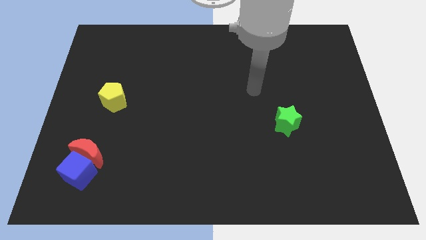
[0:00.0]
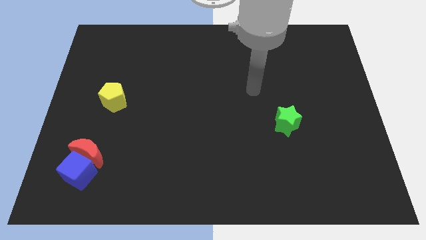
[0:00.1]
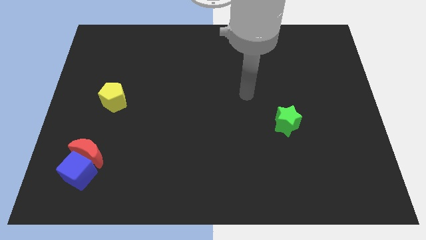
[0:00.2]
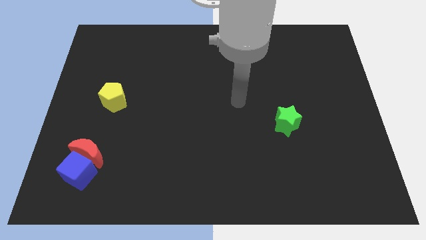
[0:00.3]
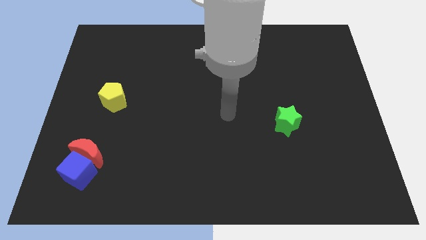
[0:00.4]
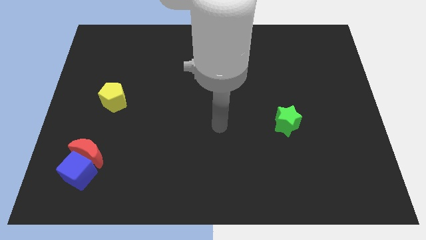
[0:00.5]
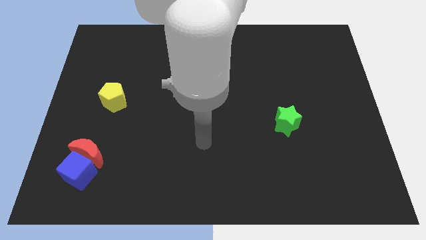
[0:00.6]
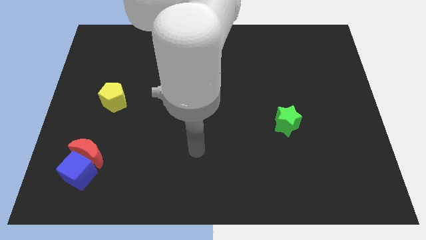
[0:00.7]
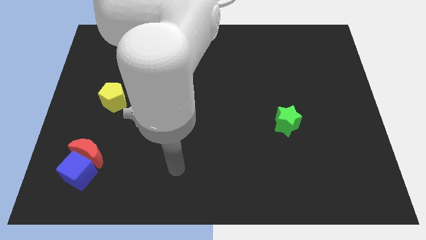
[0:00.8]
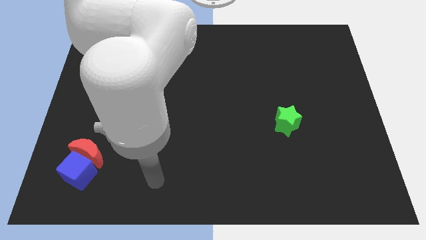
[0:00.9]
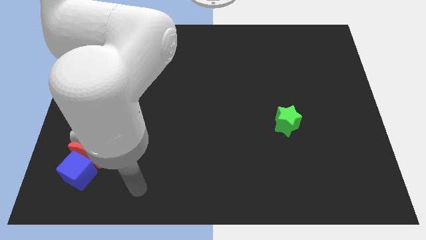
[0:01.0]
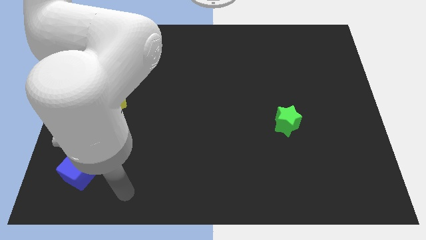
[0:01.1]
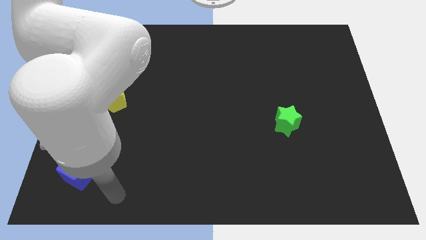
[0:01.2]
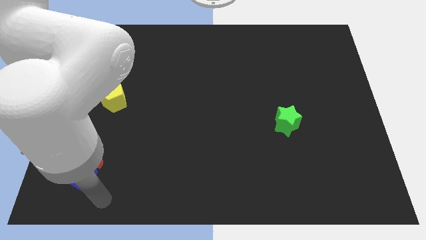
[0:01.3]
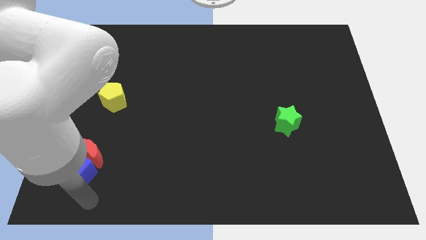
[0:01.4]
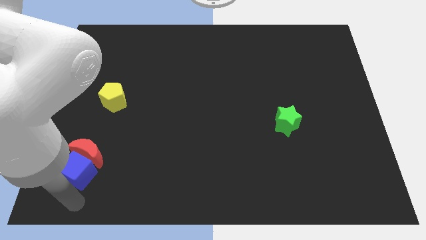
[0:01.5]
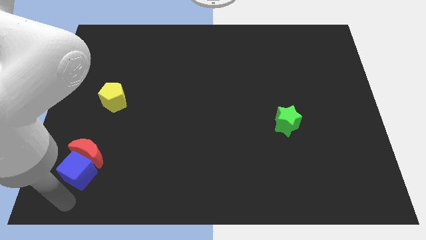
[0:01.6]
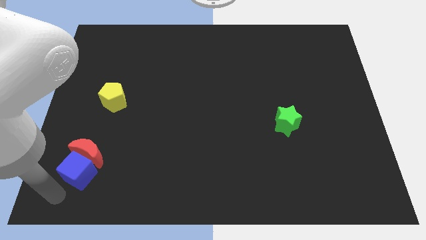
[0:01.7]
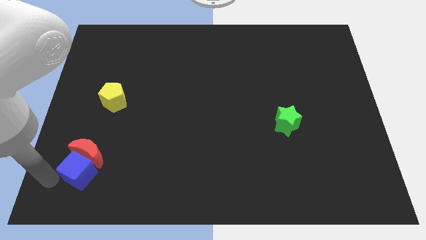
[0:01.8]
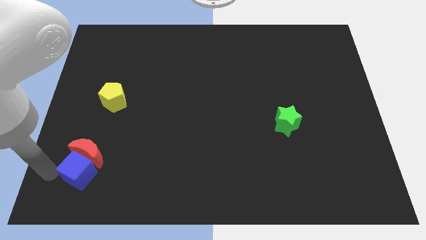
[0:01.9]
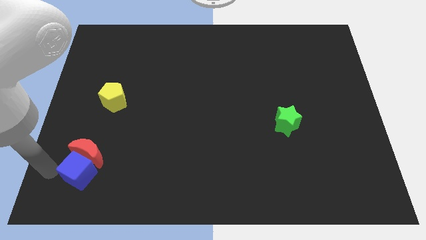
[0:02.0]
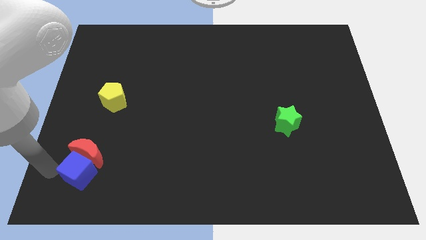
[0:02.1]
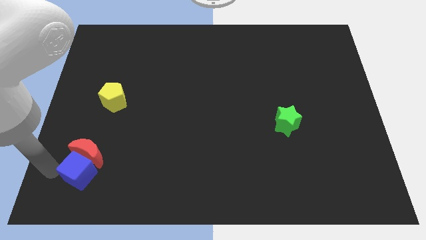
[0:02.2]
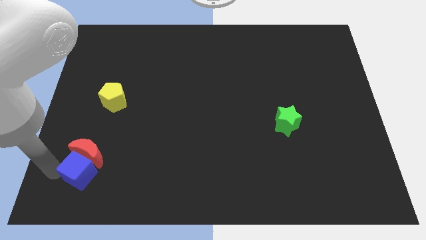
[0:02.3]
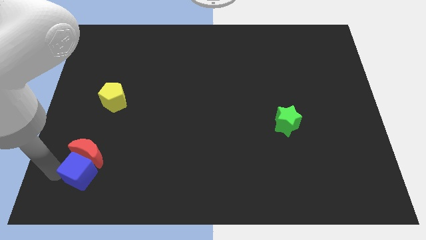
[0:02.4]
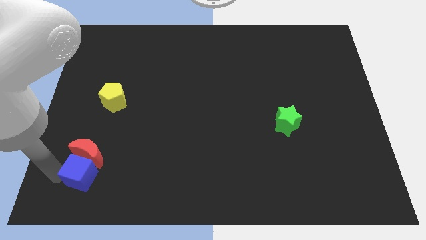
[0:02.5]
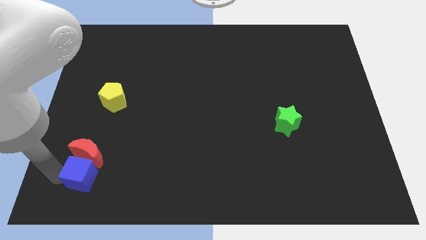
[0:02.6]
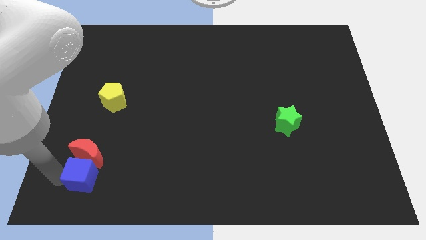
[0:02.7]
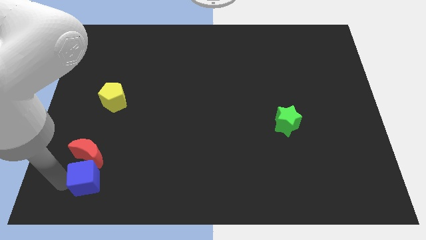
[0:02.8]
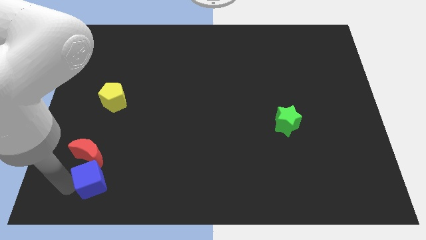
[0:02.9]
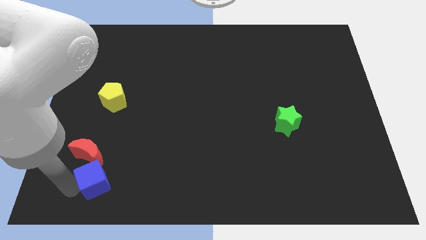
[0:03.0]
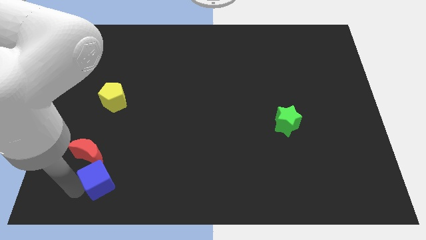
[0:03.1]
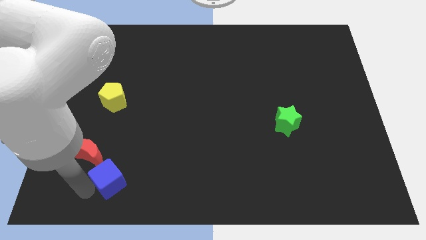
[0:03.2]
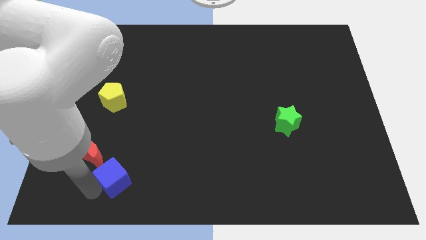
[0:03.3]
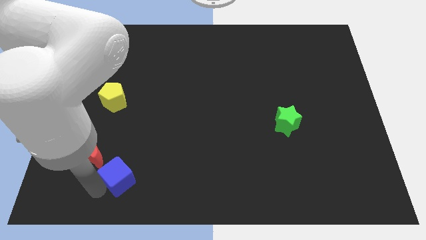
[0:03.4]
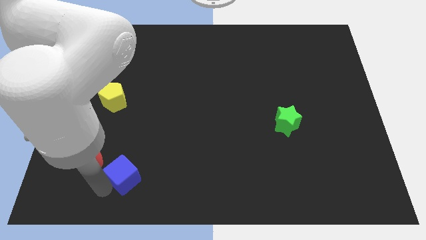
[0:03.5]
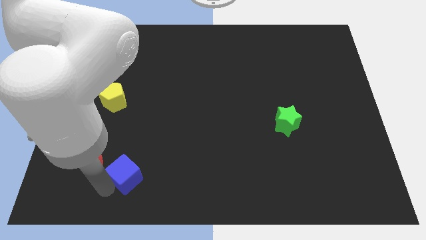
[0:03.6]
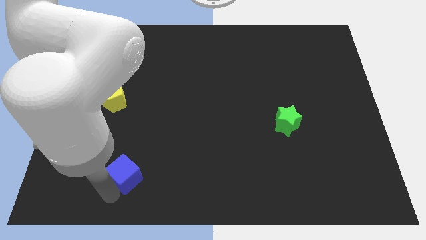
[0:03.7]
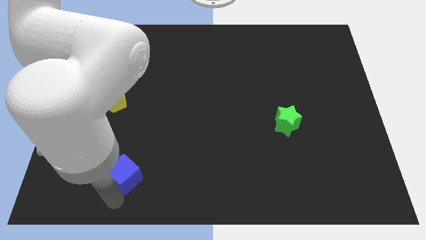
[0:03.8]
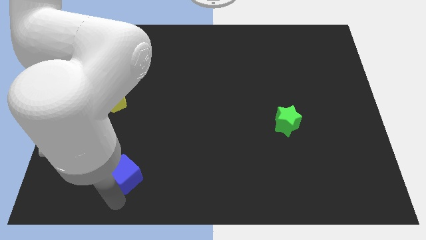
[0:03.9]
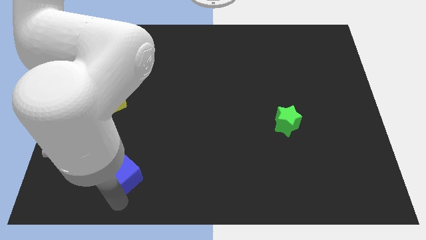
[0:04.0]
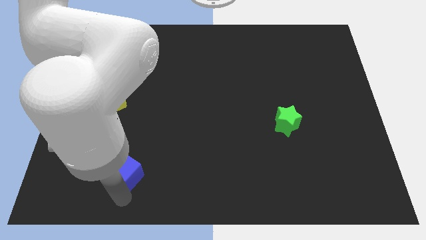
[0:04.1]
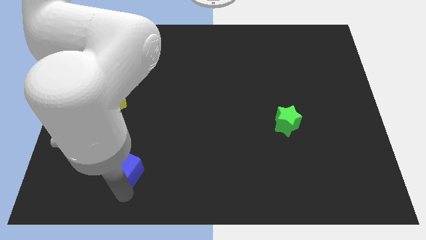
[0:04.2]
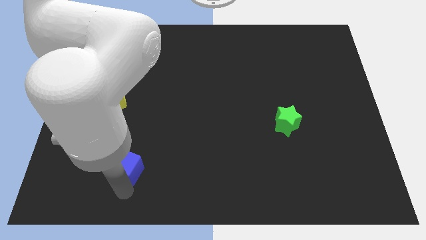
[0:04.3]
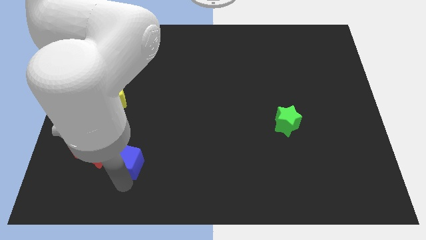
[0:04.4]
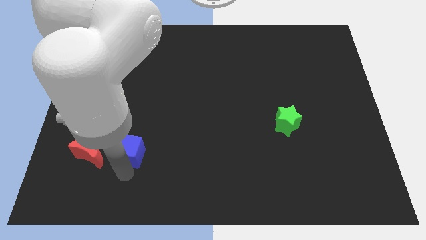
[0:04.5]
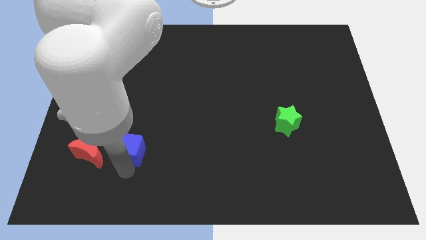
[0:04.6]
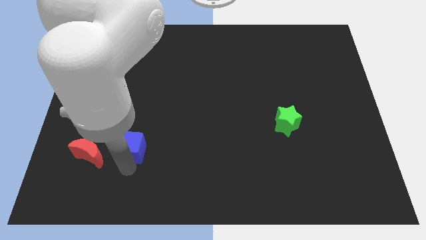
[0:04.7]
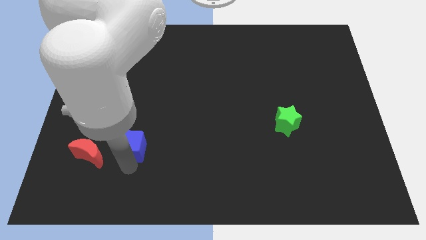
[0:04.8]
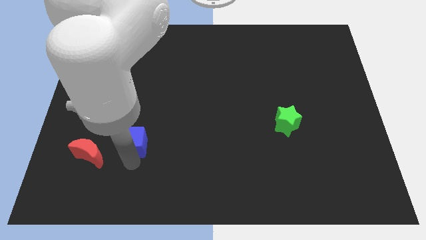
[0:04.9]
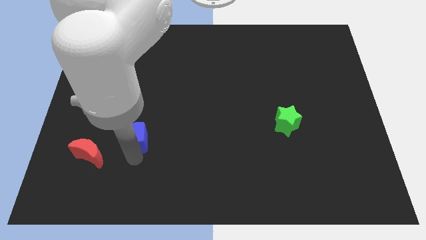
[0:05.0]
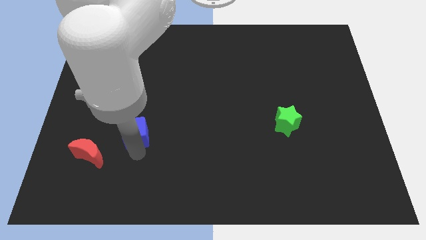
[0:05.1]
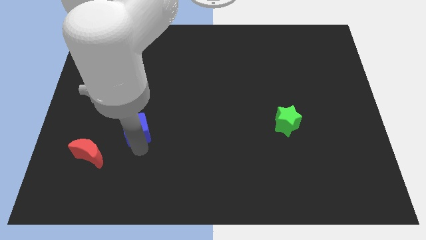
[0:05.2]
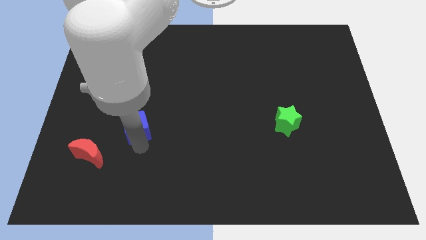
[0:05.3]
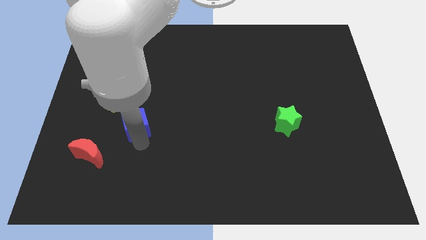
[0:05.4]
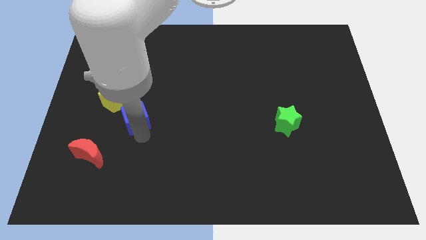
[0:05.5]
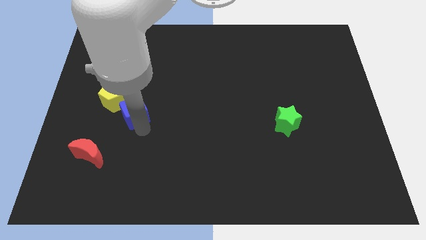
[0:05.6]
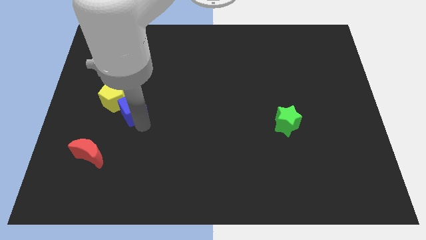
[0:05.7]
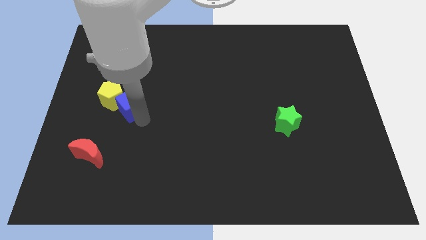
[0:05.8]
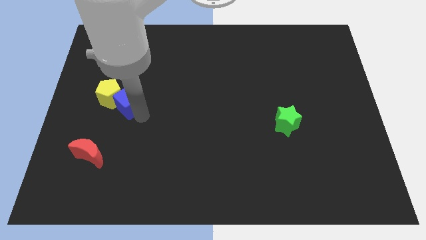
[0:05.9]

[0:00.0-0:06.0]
move the blue cube next to the yellow block

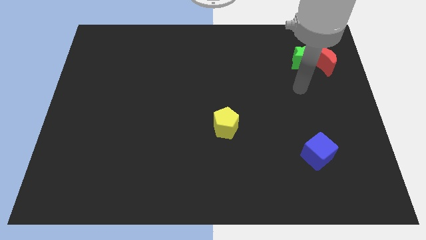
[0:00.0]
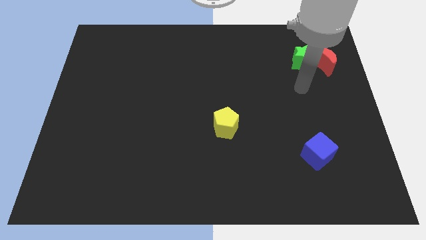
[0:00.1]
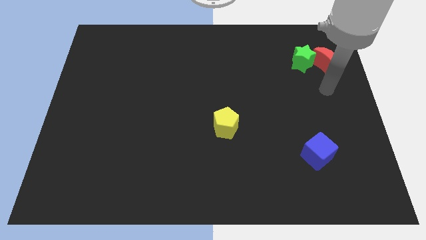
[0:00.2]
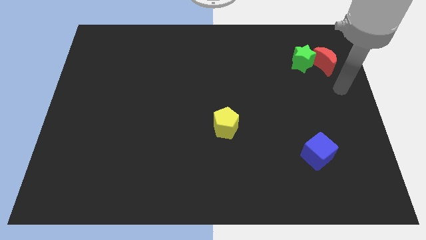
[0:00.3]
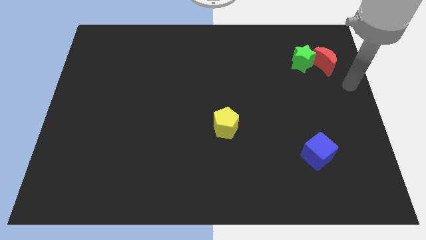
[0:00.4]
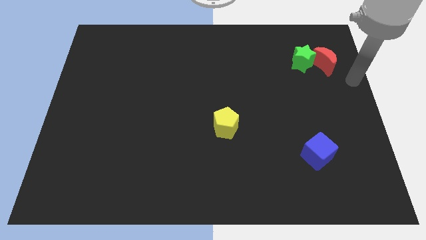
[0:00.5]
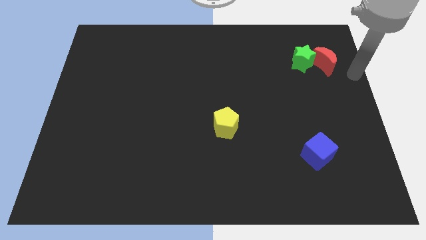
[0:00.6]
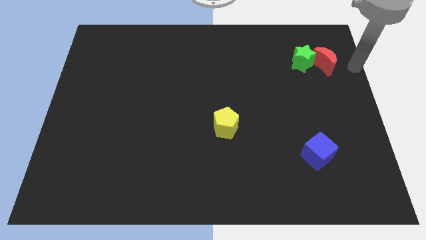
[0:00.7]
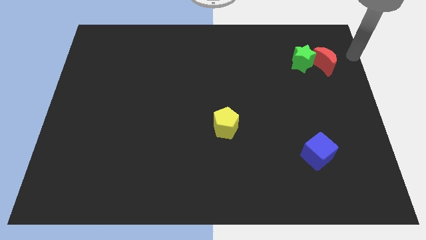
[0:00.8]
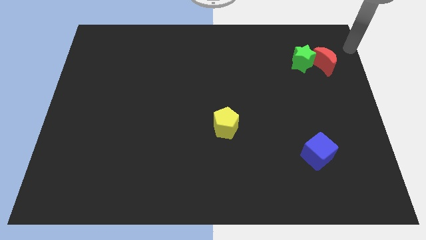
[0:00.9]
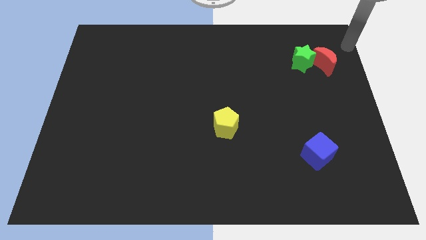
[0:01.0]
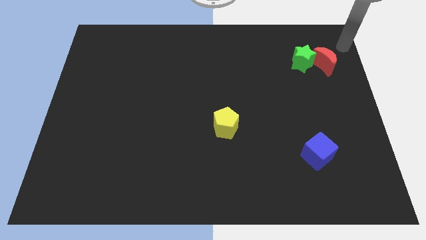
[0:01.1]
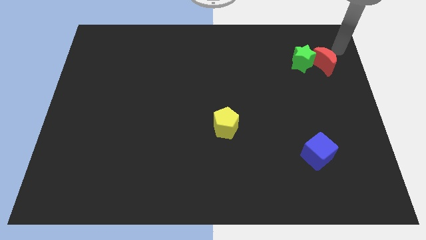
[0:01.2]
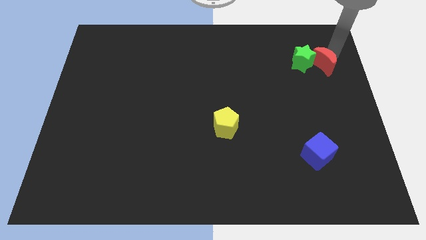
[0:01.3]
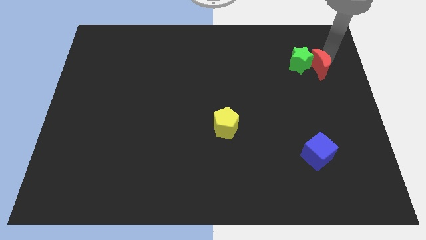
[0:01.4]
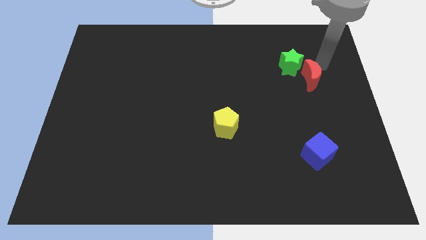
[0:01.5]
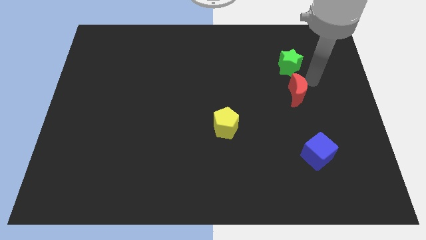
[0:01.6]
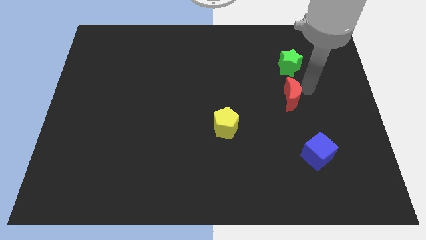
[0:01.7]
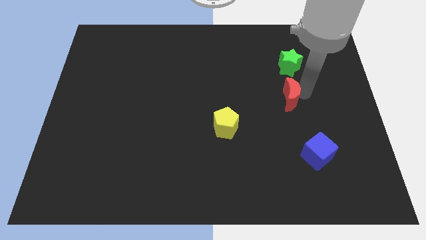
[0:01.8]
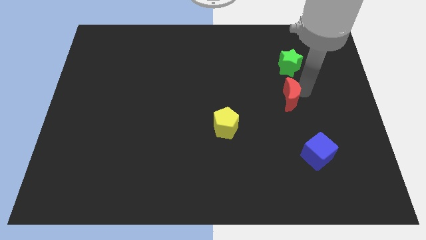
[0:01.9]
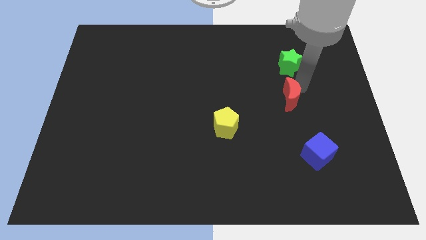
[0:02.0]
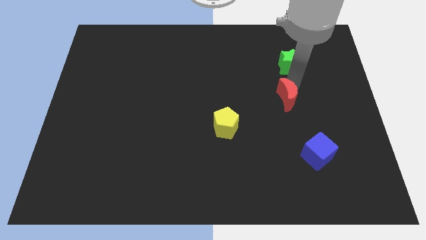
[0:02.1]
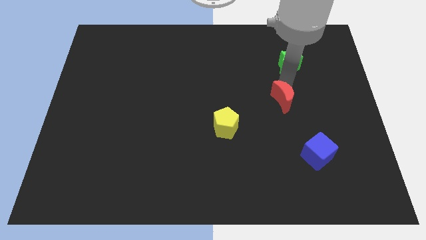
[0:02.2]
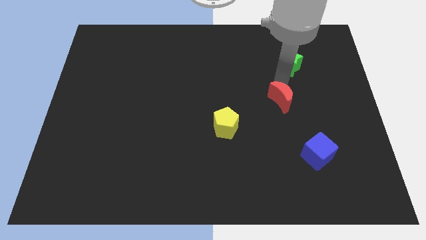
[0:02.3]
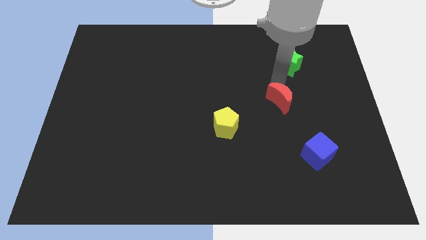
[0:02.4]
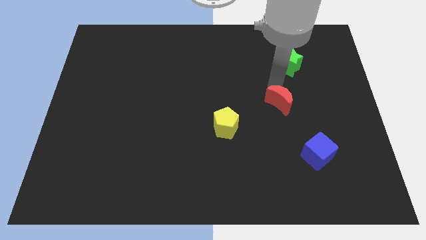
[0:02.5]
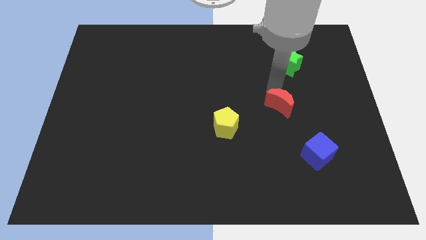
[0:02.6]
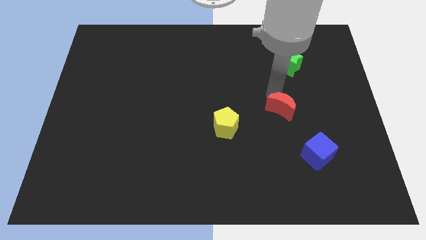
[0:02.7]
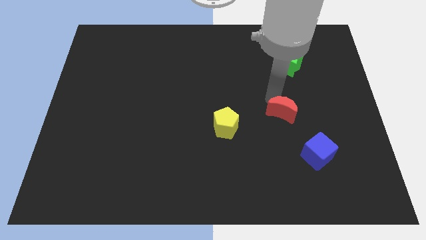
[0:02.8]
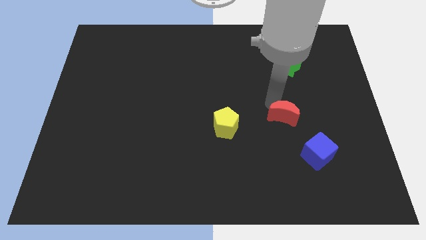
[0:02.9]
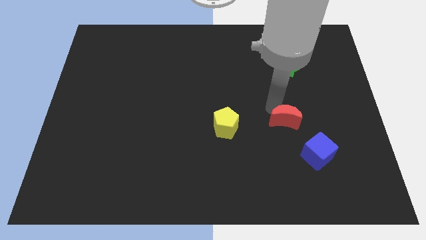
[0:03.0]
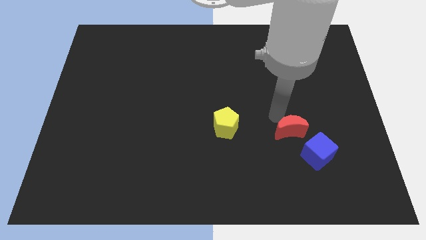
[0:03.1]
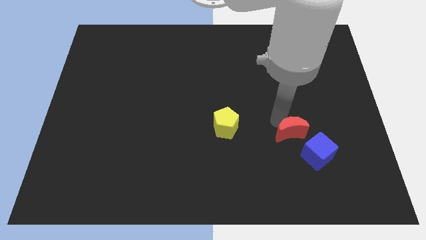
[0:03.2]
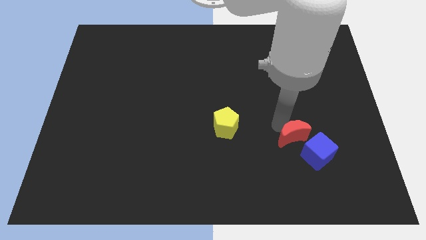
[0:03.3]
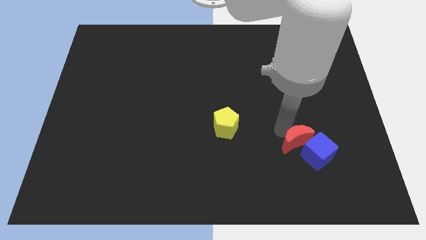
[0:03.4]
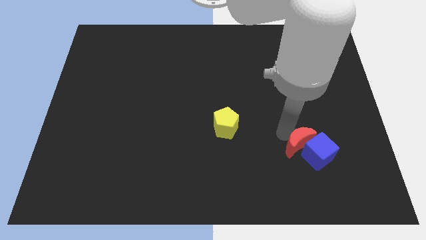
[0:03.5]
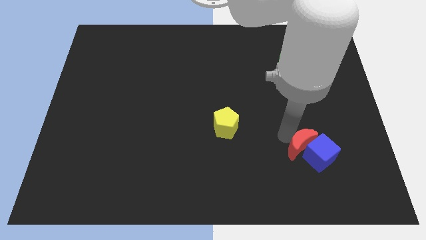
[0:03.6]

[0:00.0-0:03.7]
push the moon next to the blue cube
